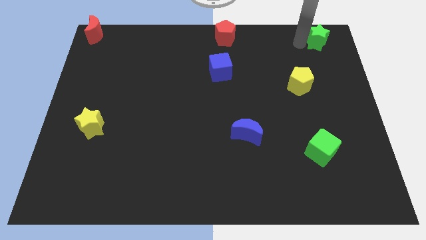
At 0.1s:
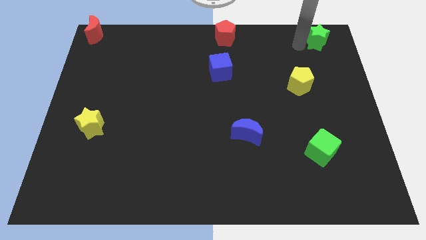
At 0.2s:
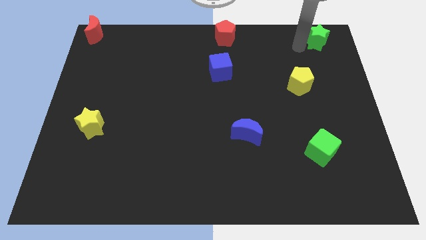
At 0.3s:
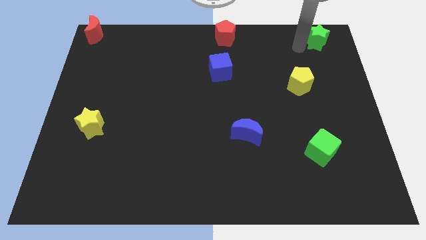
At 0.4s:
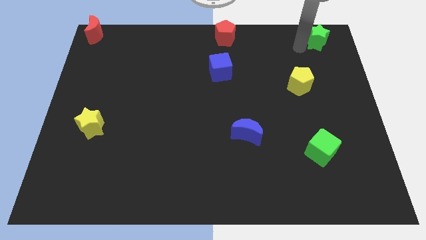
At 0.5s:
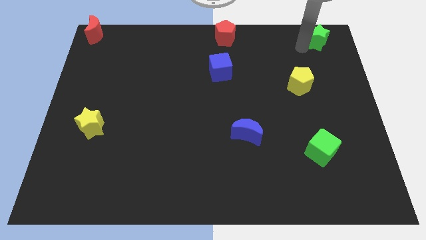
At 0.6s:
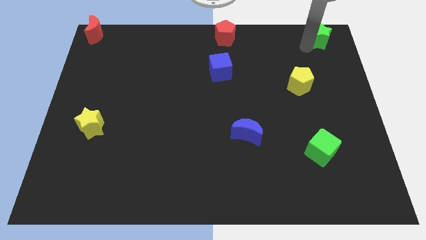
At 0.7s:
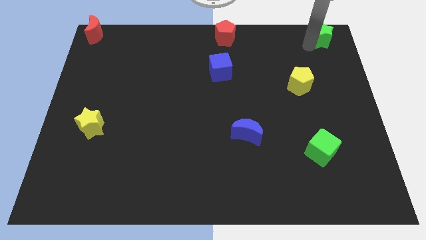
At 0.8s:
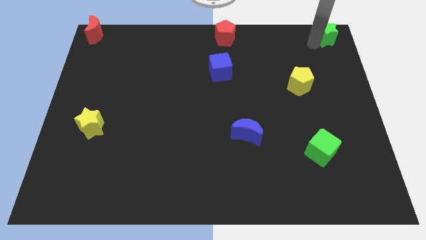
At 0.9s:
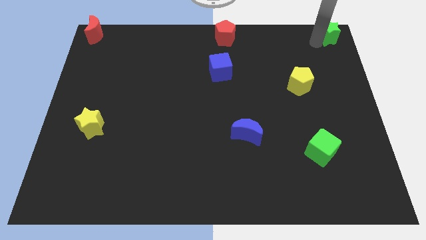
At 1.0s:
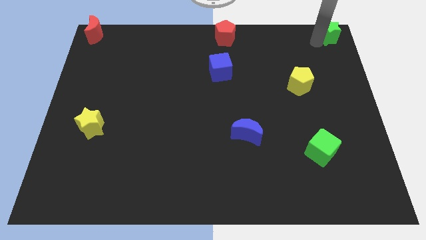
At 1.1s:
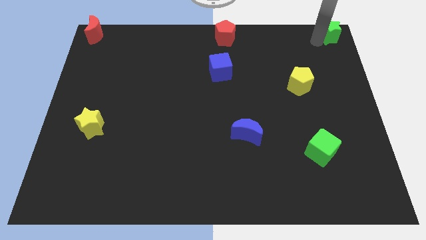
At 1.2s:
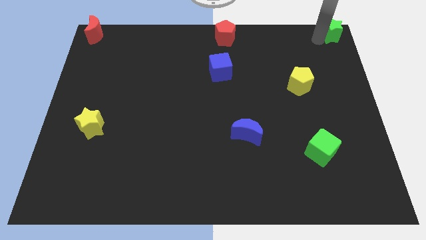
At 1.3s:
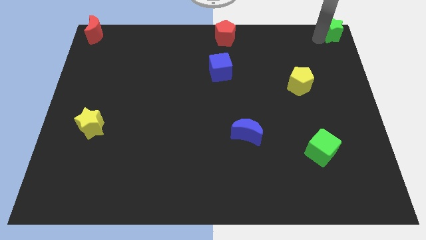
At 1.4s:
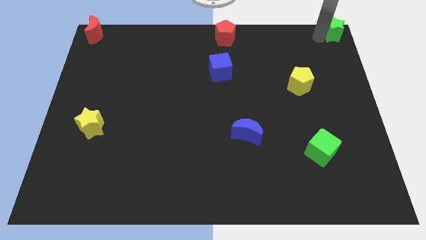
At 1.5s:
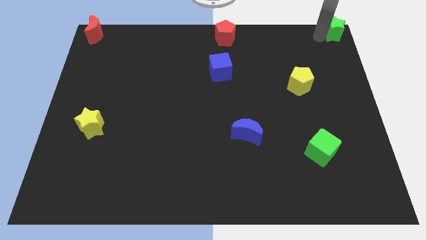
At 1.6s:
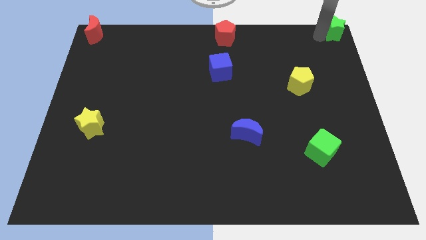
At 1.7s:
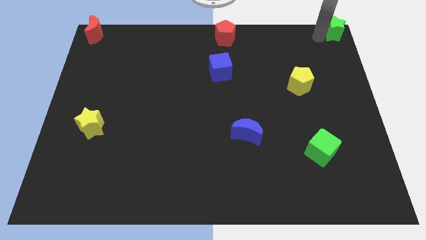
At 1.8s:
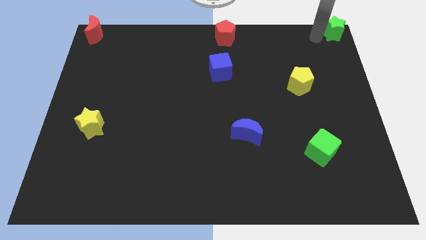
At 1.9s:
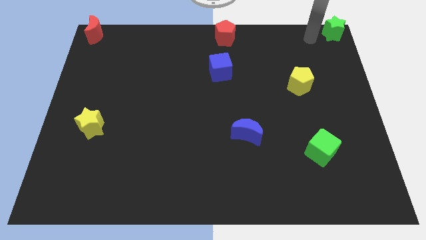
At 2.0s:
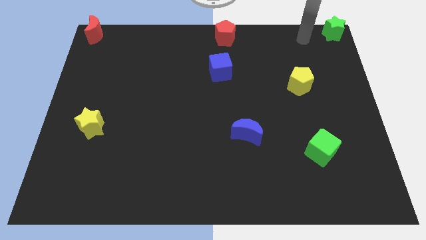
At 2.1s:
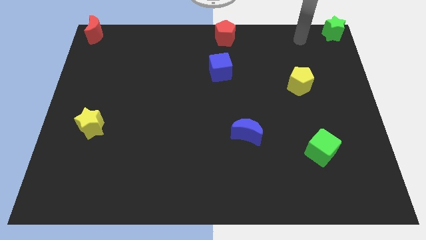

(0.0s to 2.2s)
push green star to the top right corner

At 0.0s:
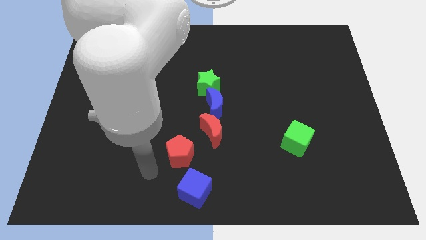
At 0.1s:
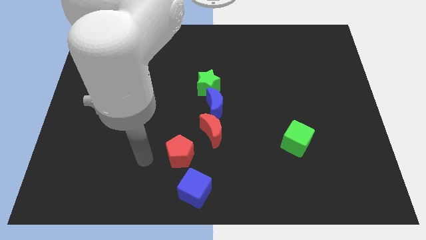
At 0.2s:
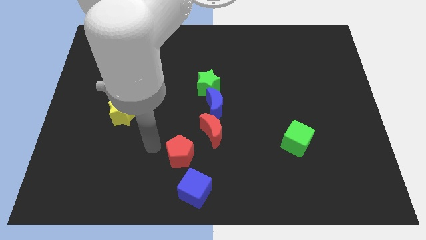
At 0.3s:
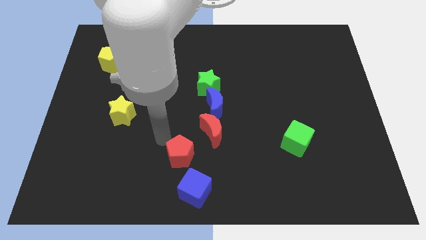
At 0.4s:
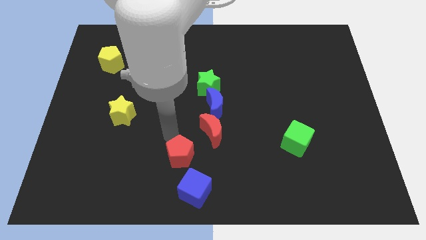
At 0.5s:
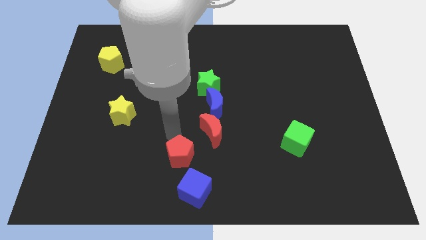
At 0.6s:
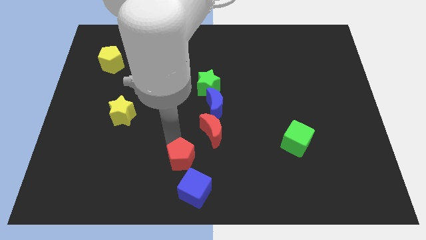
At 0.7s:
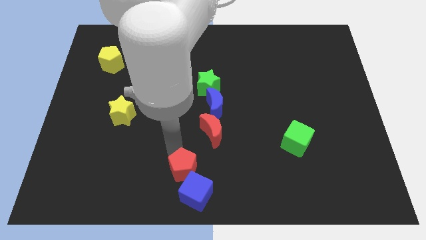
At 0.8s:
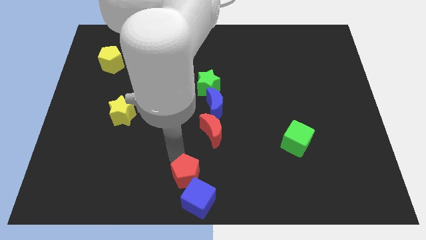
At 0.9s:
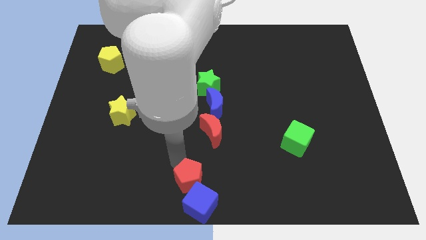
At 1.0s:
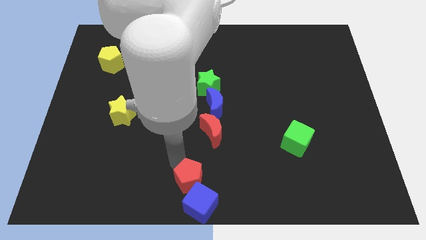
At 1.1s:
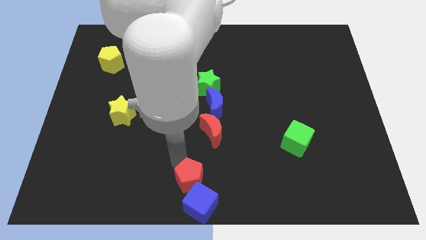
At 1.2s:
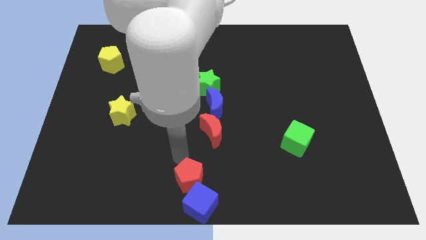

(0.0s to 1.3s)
move the red pentagon into the blue cube

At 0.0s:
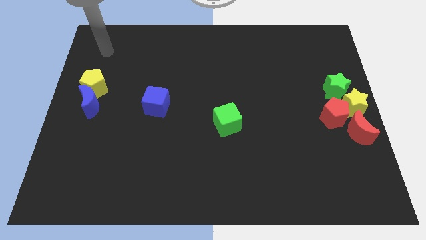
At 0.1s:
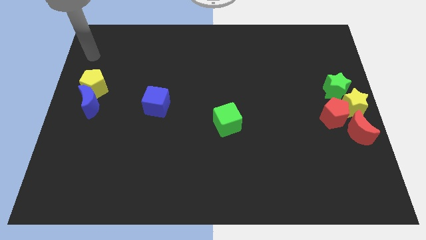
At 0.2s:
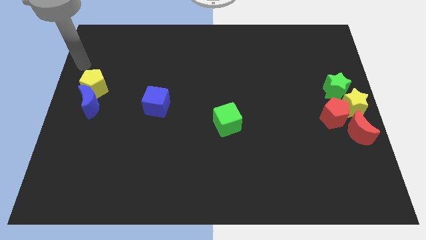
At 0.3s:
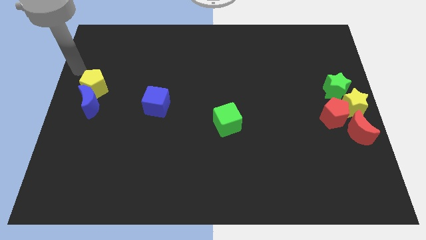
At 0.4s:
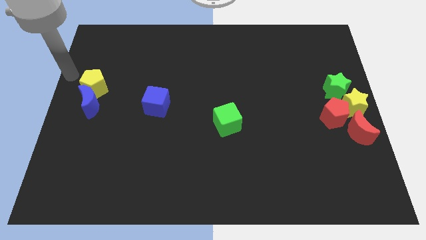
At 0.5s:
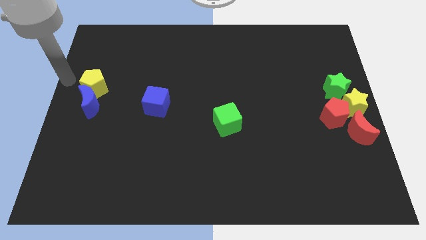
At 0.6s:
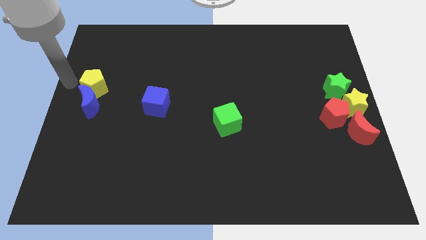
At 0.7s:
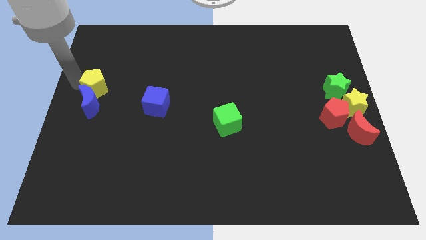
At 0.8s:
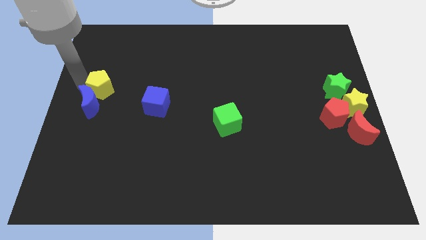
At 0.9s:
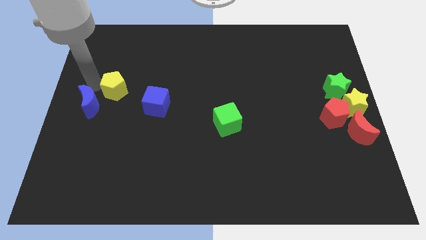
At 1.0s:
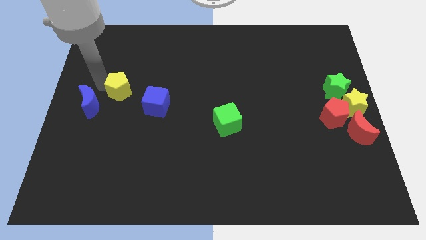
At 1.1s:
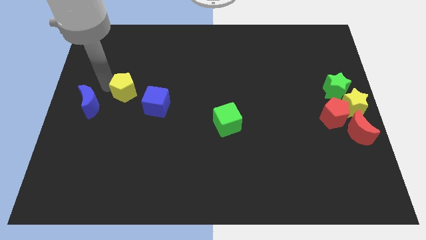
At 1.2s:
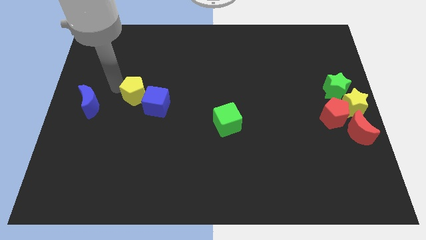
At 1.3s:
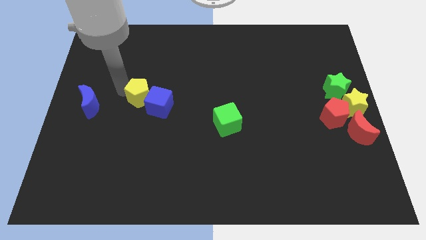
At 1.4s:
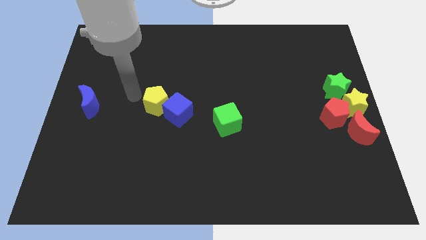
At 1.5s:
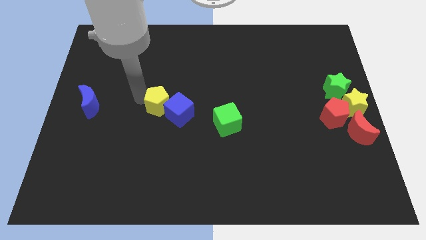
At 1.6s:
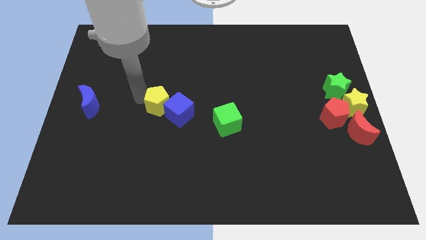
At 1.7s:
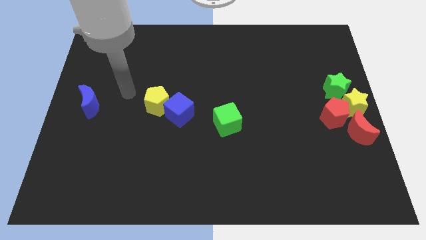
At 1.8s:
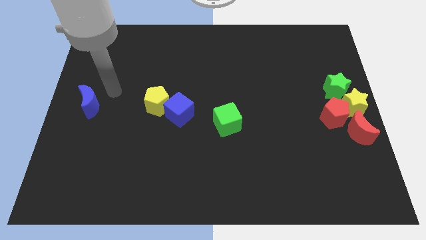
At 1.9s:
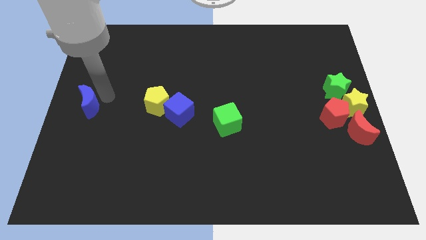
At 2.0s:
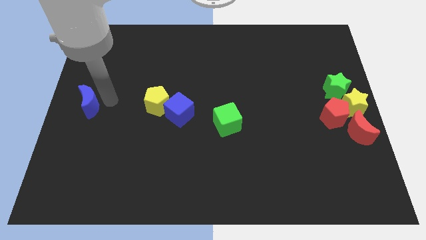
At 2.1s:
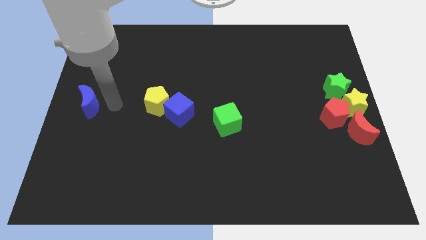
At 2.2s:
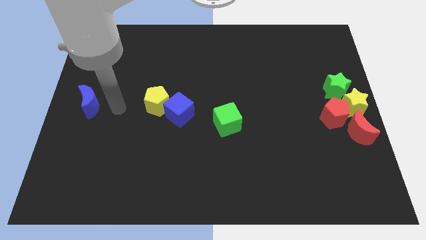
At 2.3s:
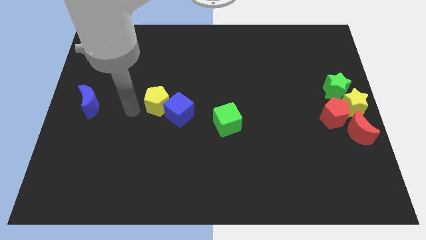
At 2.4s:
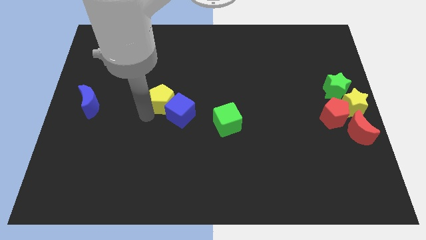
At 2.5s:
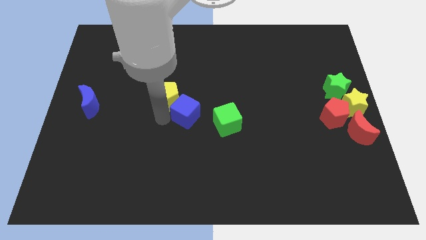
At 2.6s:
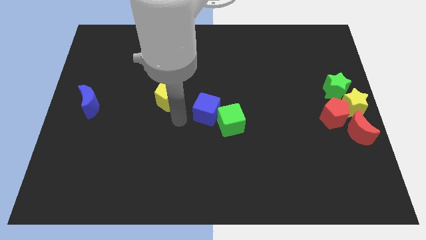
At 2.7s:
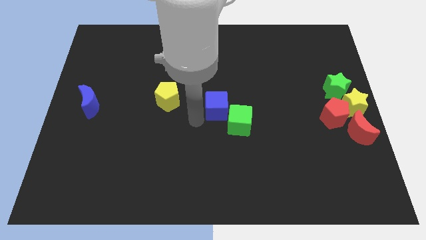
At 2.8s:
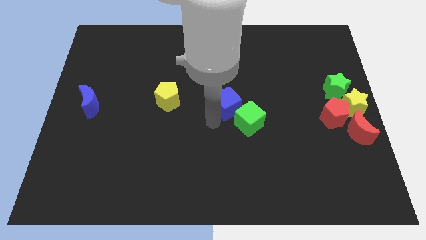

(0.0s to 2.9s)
push the yellow pentagon close to the blue cube

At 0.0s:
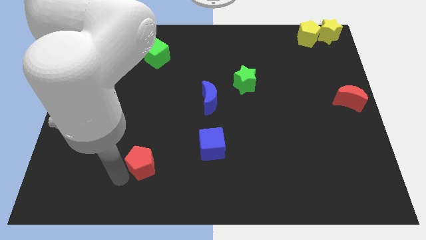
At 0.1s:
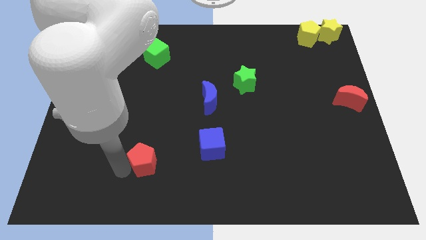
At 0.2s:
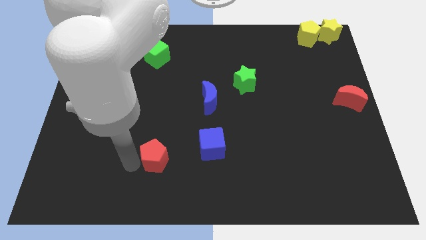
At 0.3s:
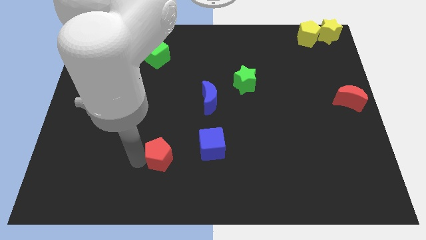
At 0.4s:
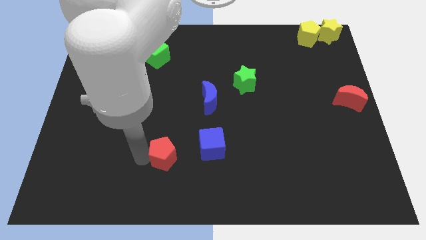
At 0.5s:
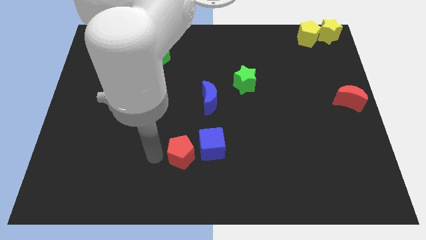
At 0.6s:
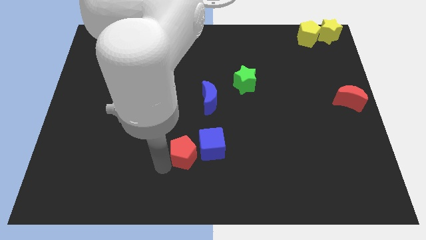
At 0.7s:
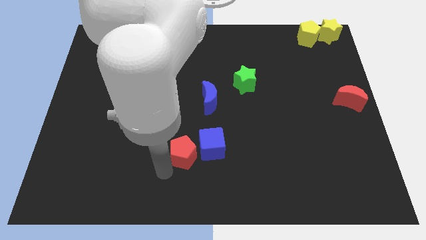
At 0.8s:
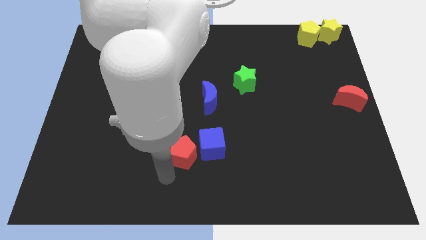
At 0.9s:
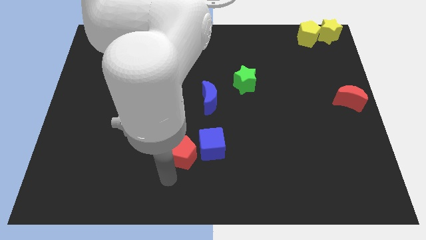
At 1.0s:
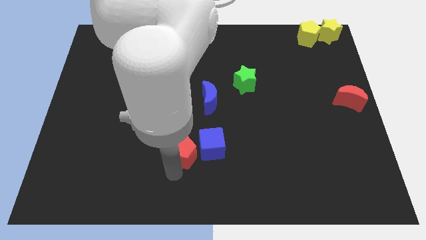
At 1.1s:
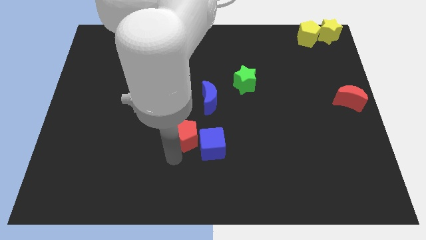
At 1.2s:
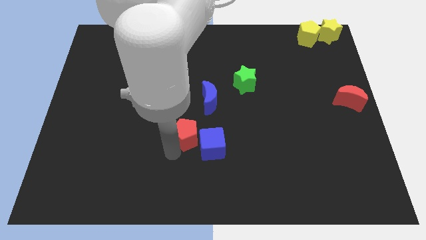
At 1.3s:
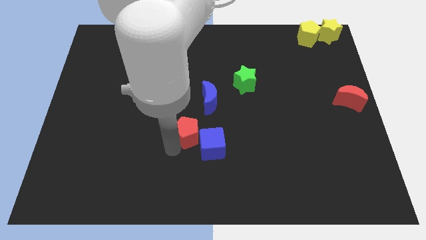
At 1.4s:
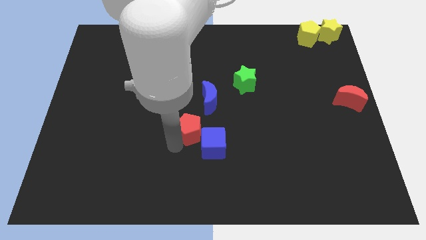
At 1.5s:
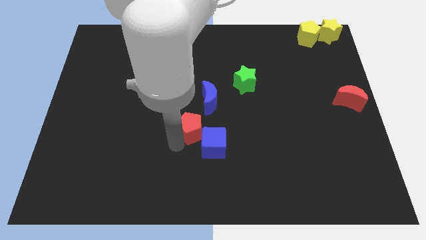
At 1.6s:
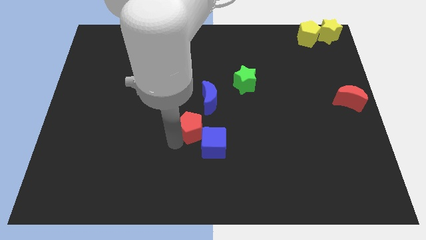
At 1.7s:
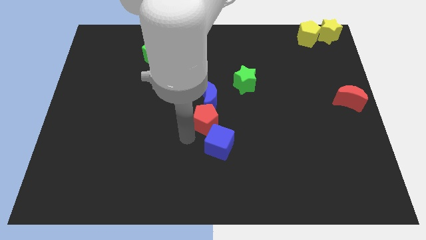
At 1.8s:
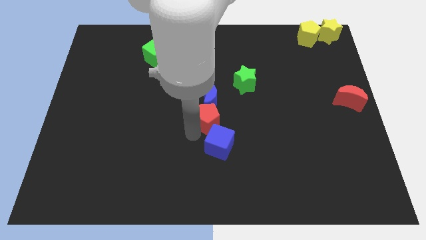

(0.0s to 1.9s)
push the red pentagon into the blue cube

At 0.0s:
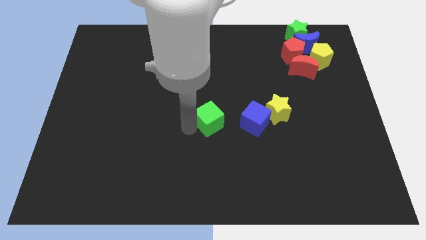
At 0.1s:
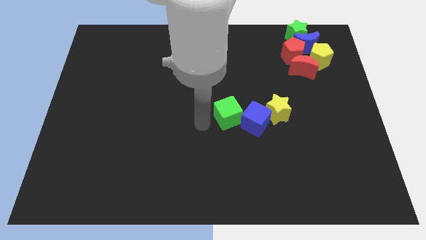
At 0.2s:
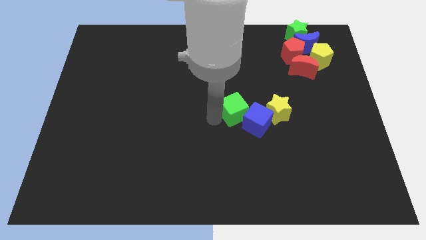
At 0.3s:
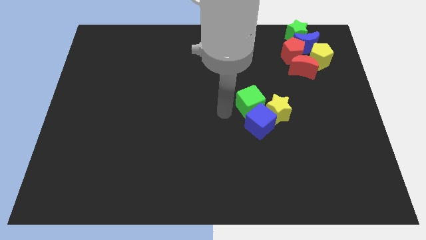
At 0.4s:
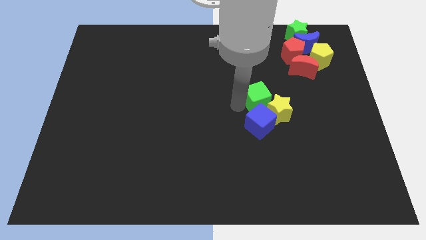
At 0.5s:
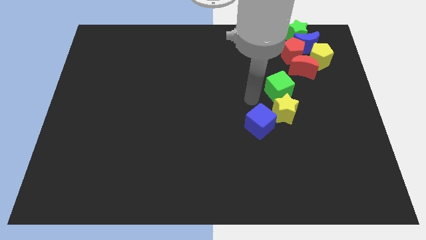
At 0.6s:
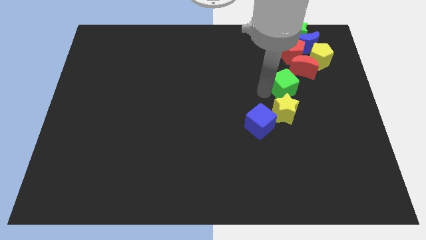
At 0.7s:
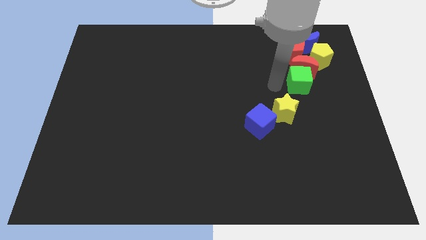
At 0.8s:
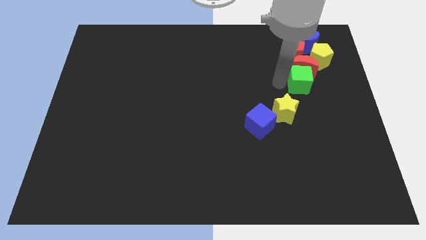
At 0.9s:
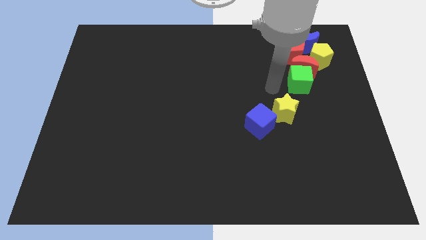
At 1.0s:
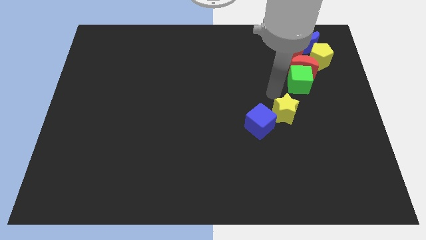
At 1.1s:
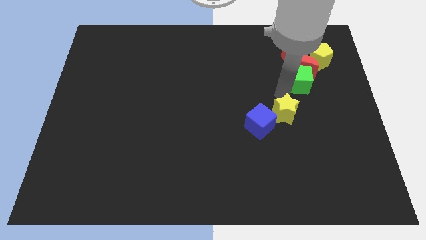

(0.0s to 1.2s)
move the green cube into the red crescent
